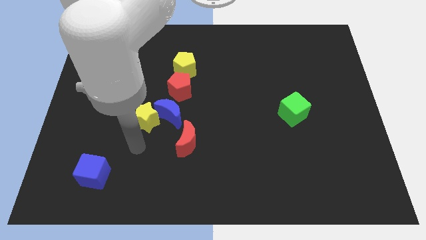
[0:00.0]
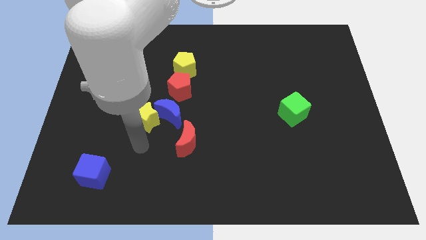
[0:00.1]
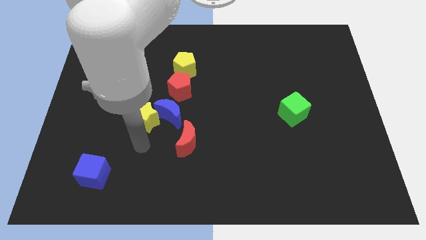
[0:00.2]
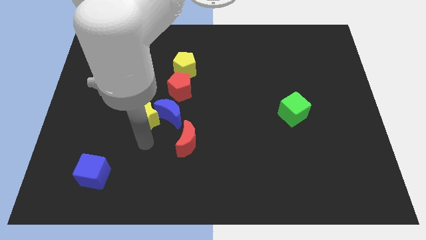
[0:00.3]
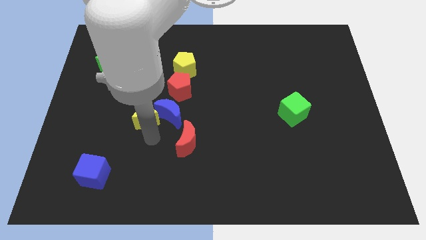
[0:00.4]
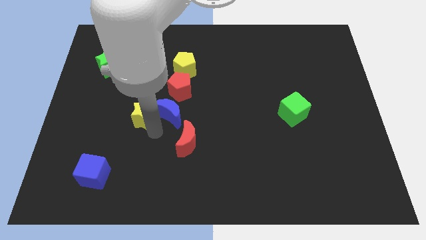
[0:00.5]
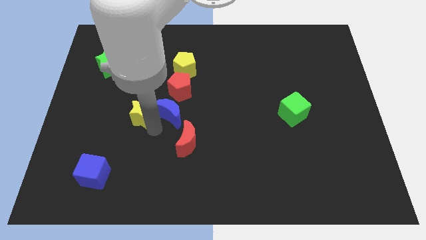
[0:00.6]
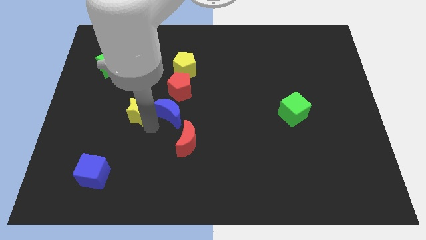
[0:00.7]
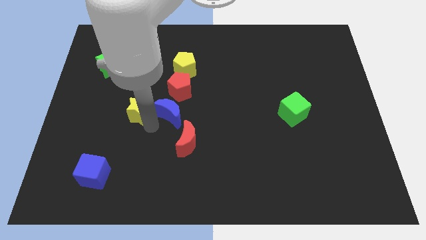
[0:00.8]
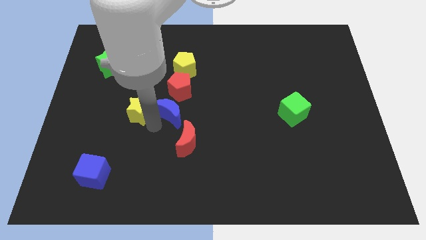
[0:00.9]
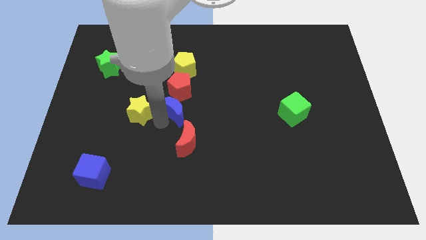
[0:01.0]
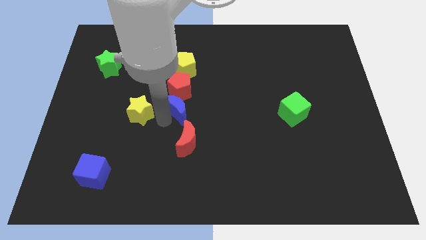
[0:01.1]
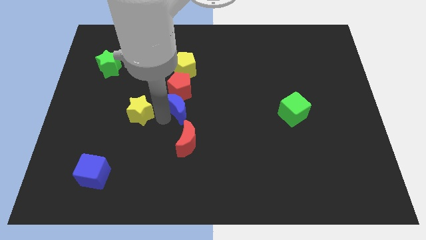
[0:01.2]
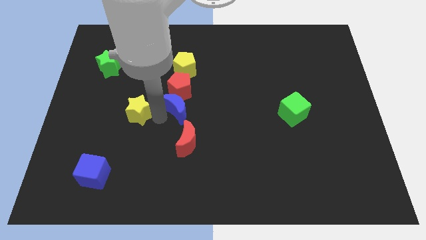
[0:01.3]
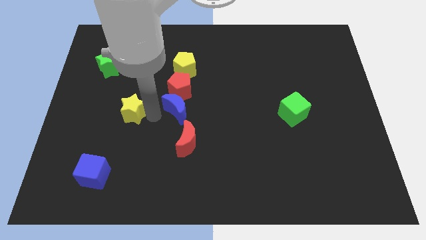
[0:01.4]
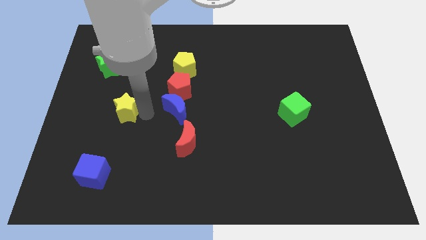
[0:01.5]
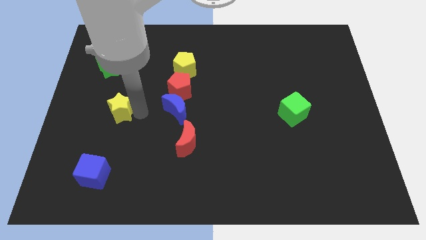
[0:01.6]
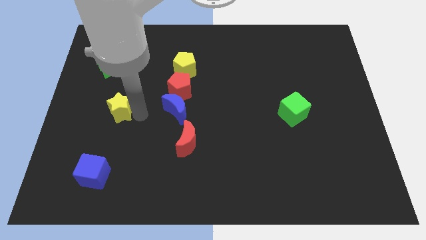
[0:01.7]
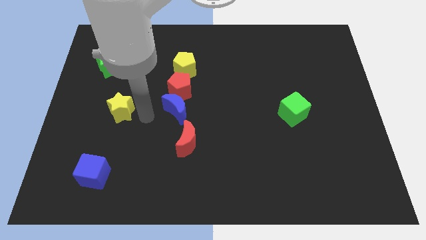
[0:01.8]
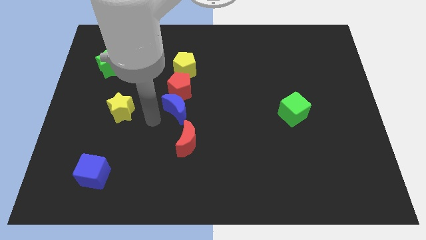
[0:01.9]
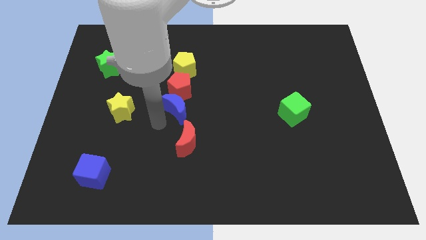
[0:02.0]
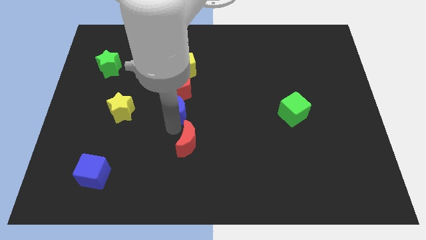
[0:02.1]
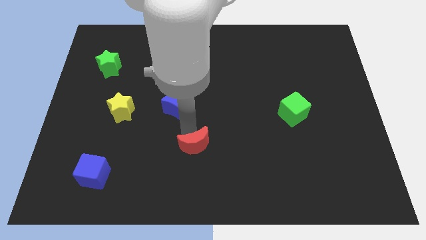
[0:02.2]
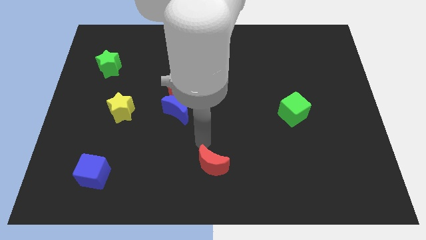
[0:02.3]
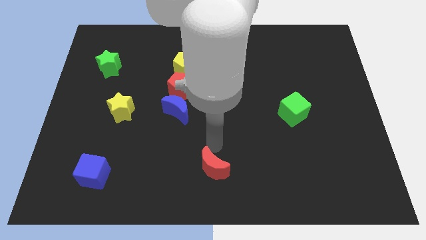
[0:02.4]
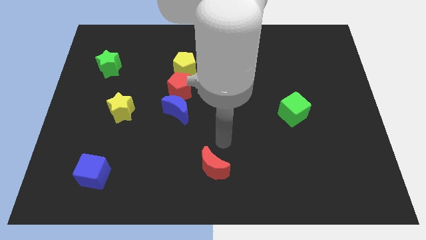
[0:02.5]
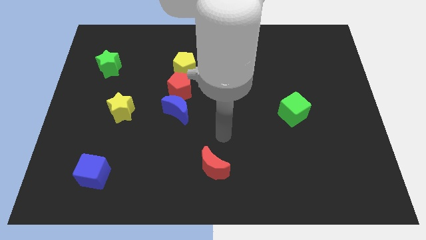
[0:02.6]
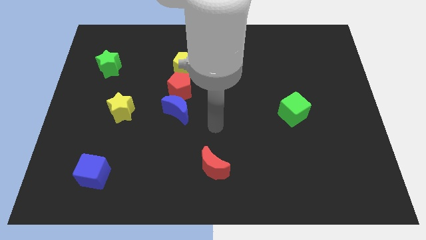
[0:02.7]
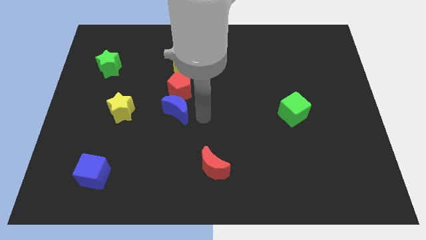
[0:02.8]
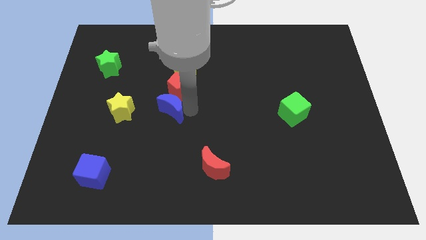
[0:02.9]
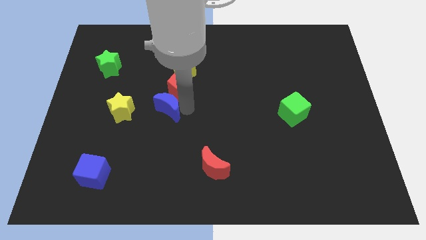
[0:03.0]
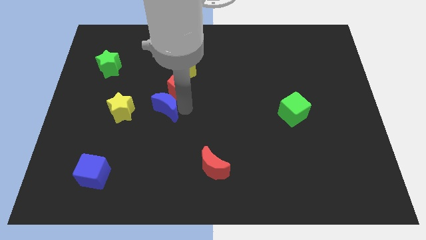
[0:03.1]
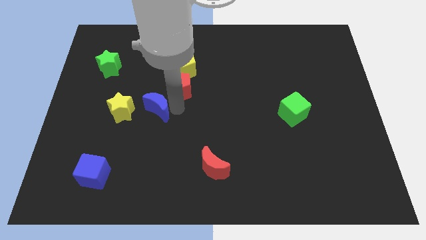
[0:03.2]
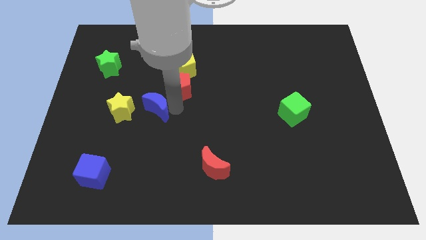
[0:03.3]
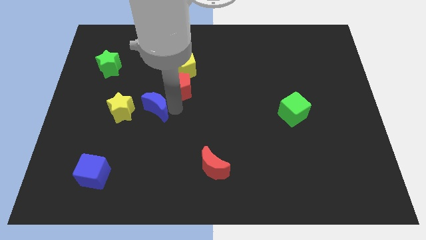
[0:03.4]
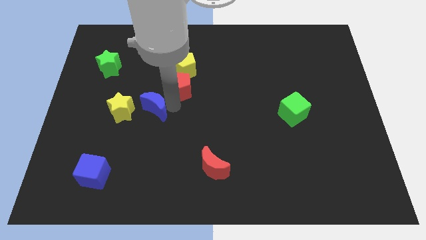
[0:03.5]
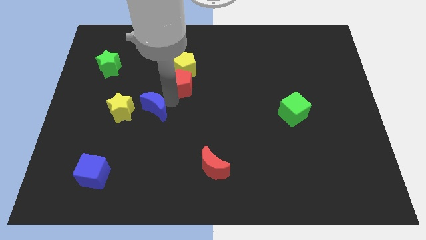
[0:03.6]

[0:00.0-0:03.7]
move the red moon to the right of the blue cube

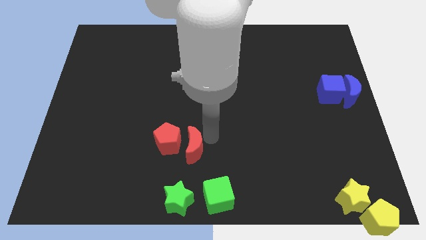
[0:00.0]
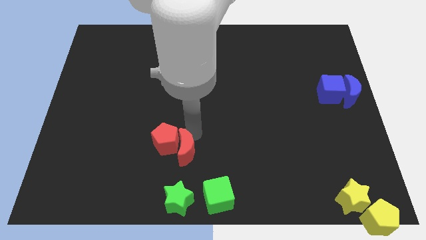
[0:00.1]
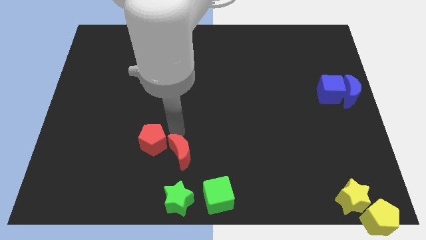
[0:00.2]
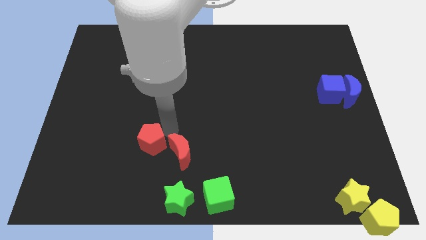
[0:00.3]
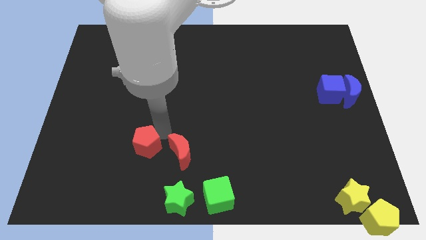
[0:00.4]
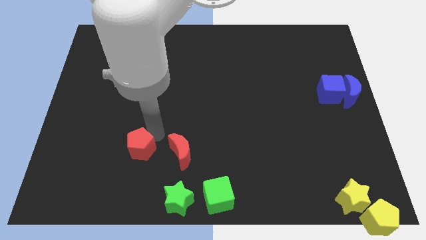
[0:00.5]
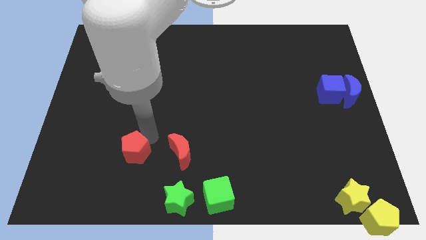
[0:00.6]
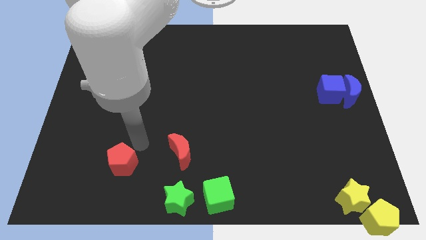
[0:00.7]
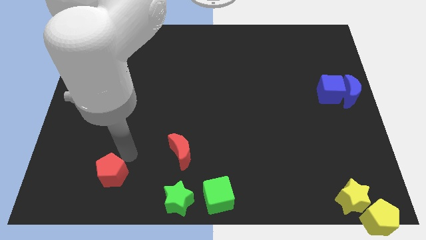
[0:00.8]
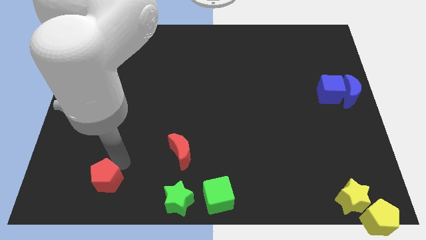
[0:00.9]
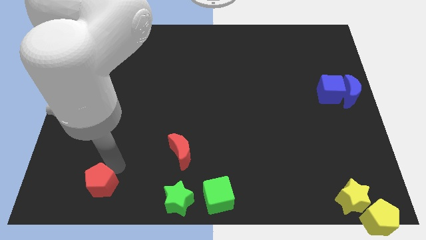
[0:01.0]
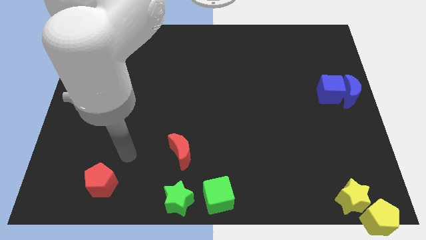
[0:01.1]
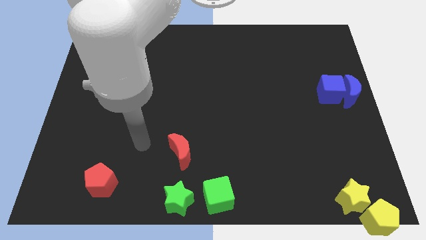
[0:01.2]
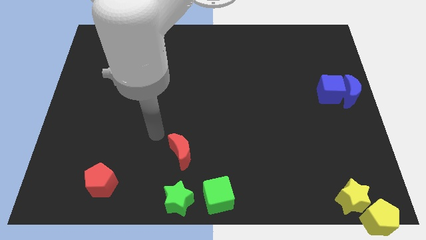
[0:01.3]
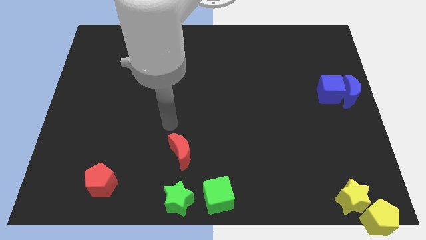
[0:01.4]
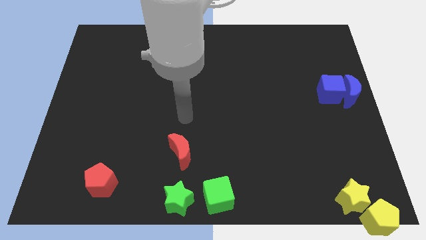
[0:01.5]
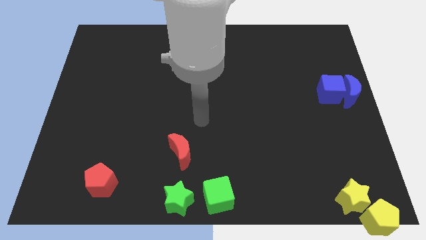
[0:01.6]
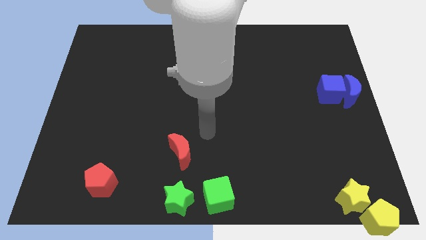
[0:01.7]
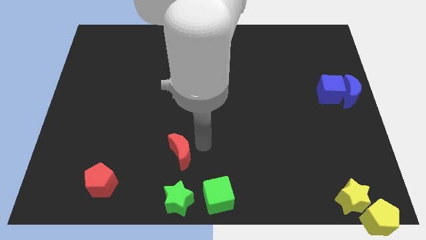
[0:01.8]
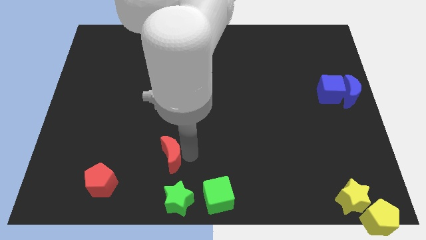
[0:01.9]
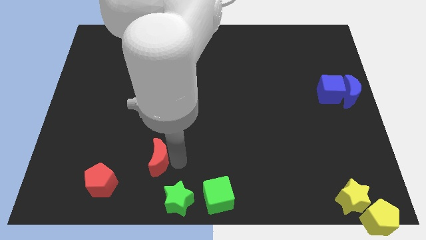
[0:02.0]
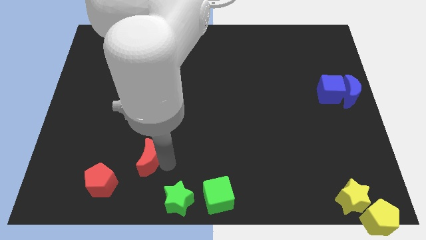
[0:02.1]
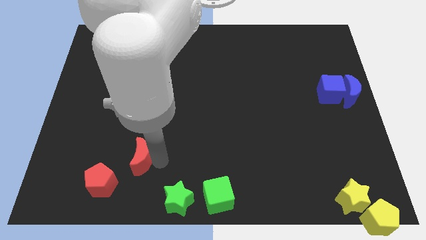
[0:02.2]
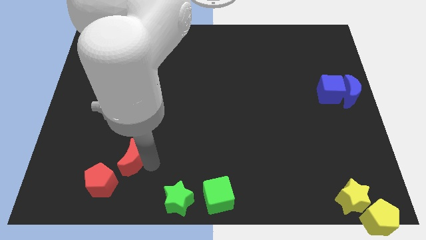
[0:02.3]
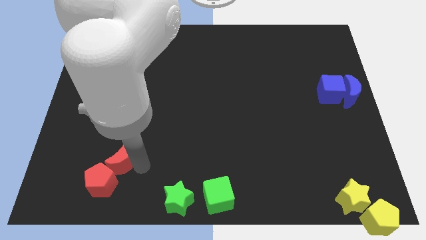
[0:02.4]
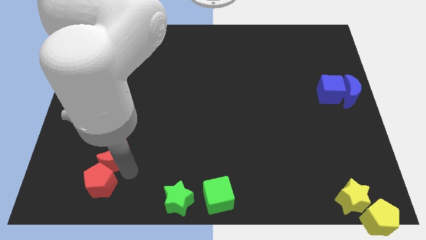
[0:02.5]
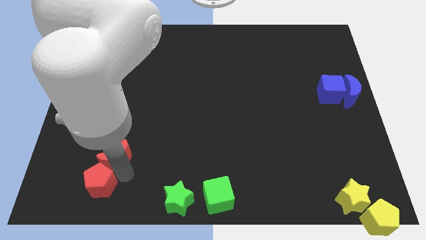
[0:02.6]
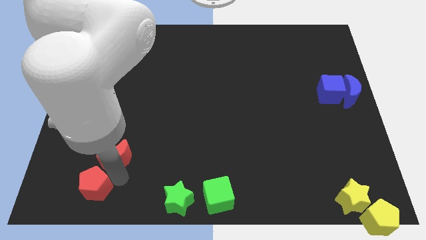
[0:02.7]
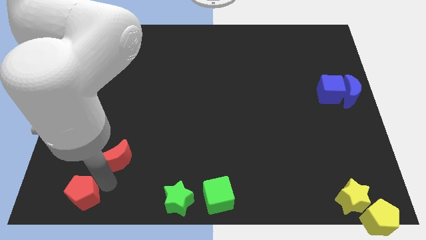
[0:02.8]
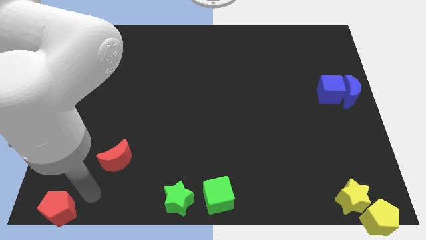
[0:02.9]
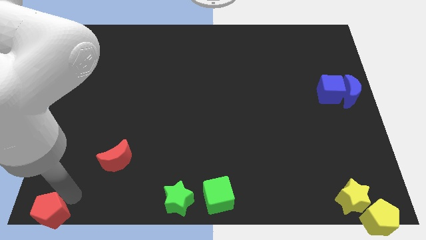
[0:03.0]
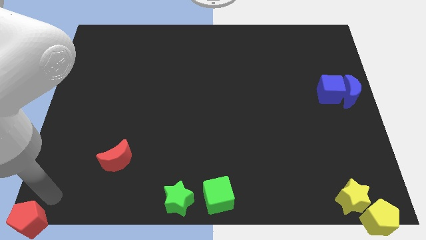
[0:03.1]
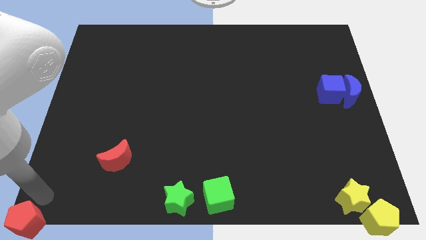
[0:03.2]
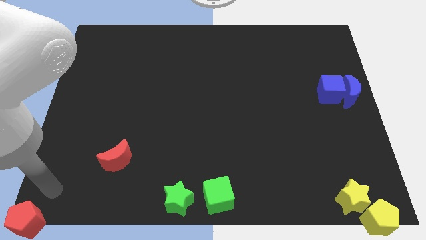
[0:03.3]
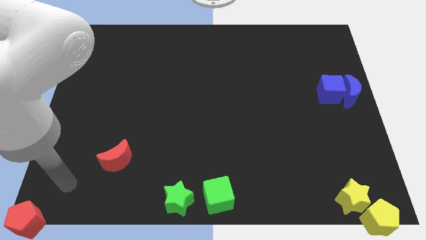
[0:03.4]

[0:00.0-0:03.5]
push the red pentagon to the bottom right

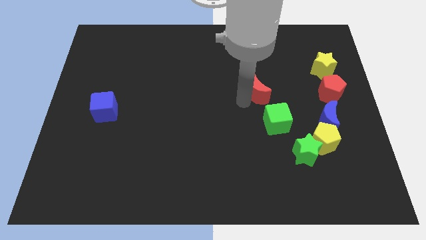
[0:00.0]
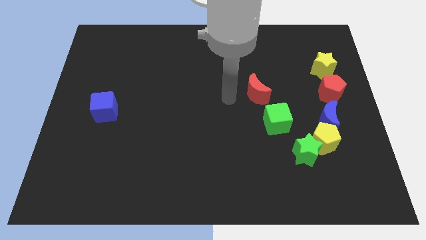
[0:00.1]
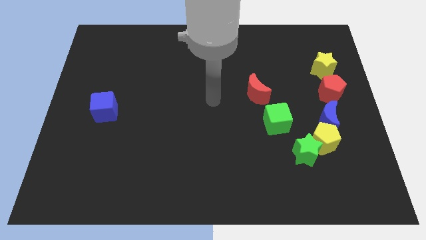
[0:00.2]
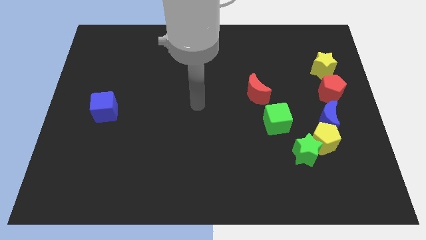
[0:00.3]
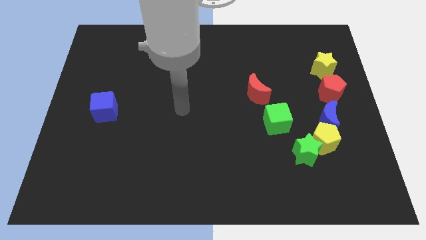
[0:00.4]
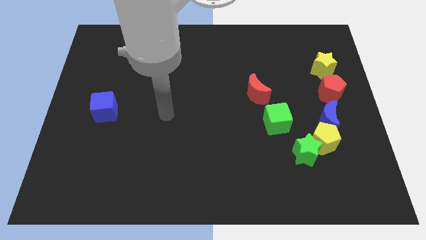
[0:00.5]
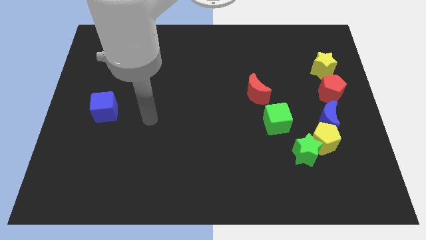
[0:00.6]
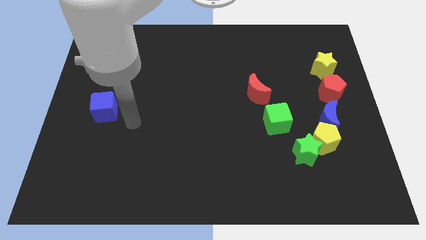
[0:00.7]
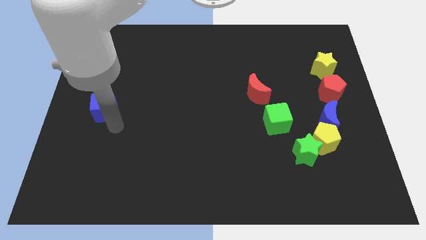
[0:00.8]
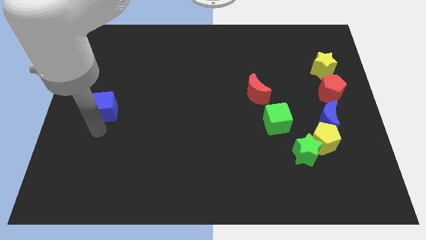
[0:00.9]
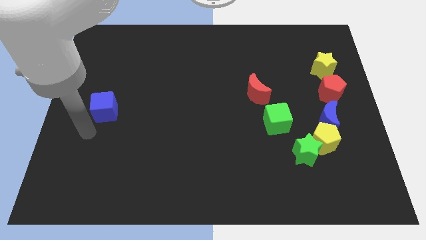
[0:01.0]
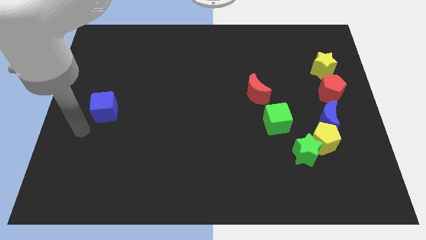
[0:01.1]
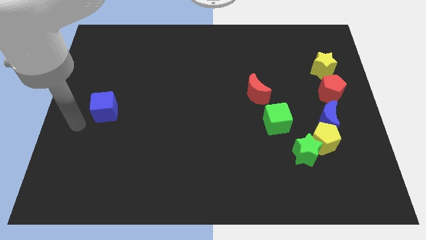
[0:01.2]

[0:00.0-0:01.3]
move your arm towards the blue cube

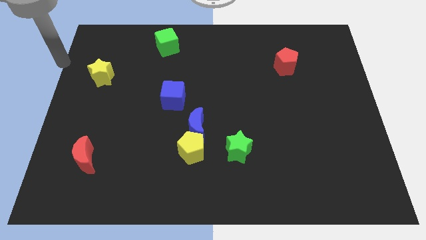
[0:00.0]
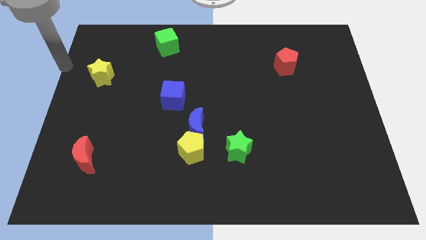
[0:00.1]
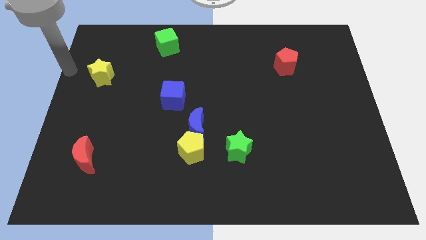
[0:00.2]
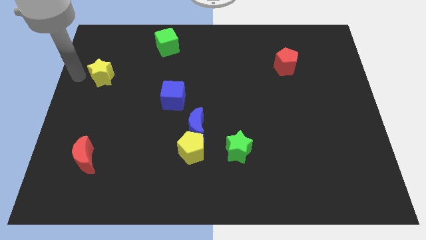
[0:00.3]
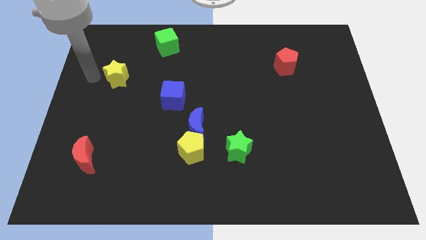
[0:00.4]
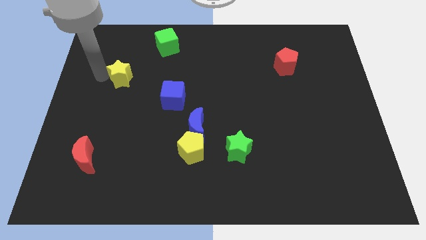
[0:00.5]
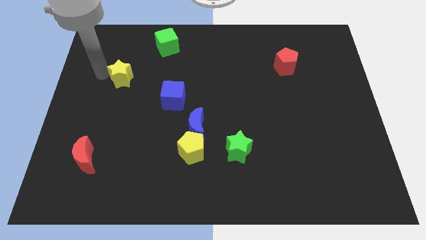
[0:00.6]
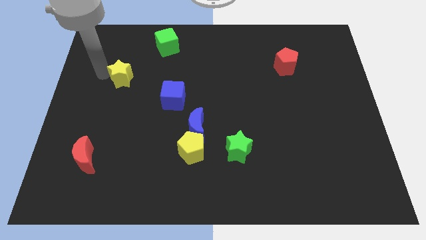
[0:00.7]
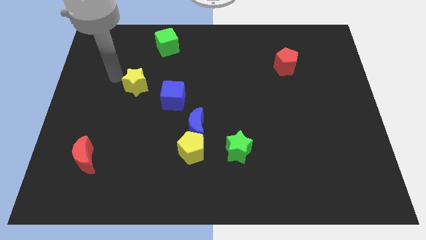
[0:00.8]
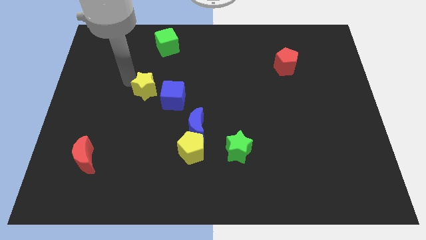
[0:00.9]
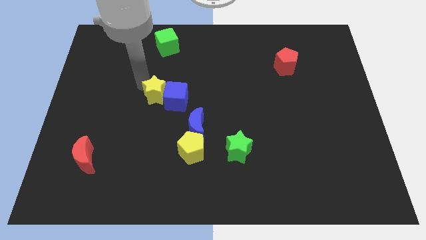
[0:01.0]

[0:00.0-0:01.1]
push the yellow star to the left of the blue cube
